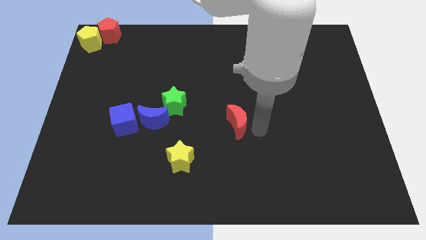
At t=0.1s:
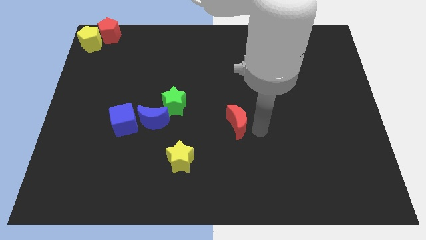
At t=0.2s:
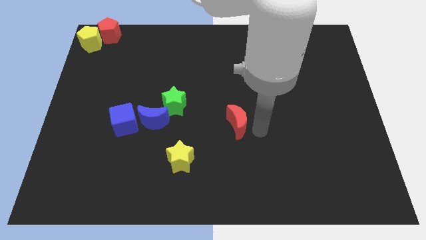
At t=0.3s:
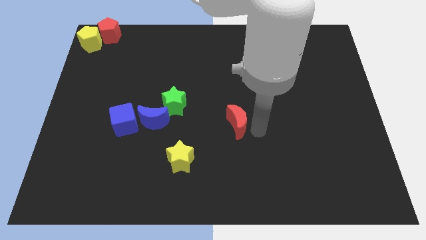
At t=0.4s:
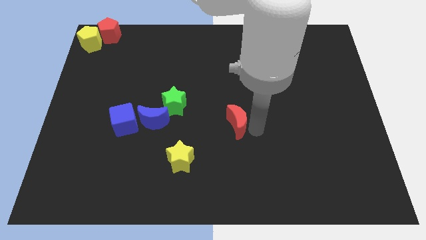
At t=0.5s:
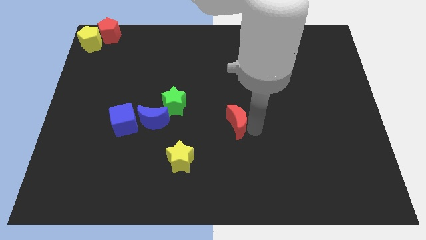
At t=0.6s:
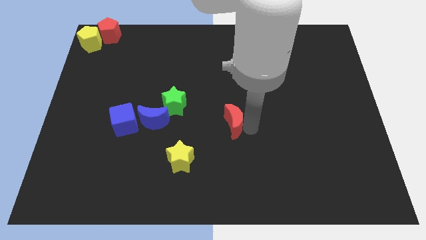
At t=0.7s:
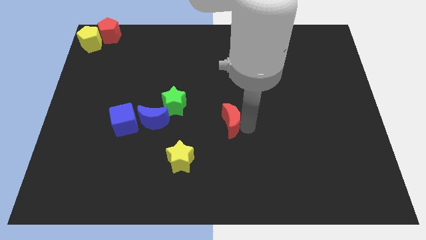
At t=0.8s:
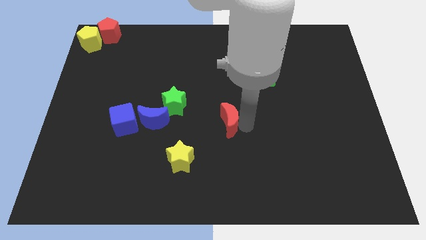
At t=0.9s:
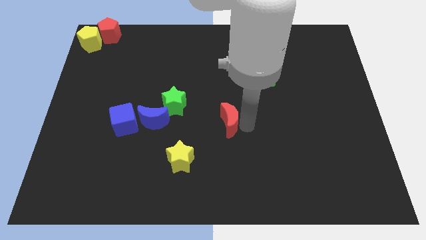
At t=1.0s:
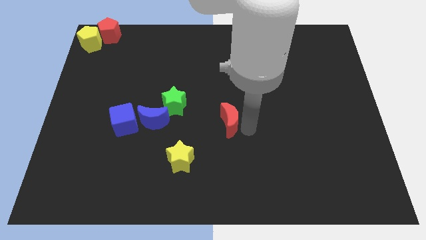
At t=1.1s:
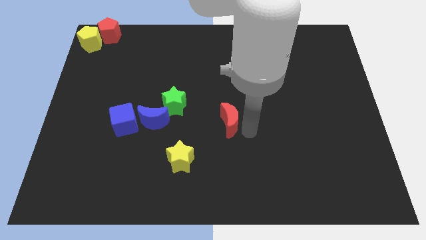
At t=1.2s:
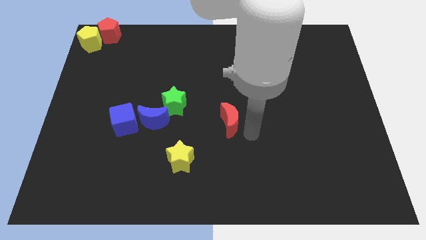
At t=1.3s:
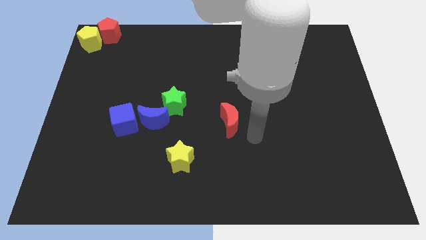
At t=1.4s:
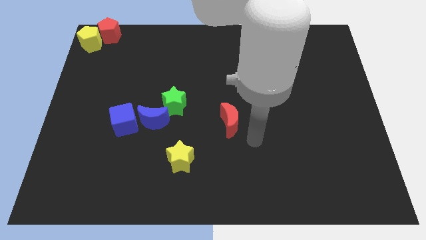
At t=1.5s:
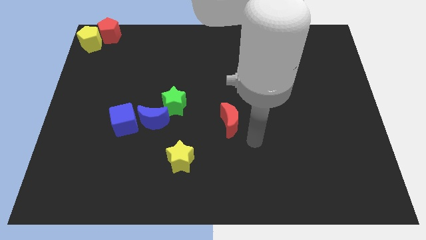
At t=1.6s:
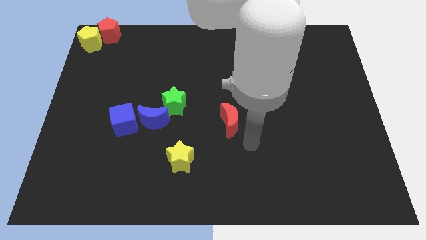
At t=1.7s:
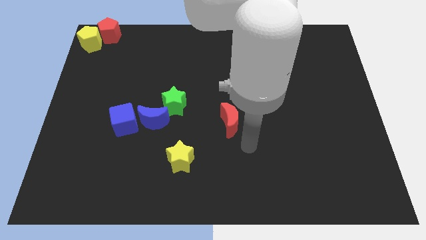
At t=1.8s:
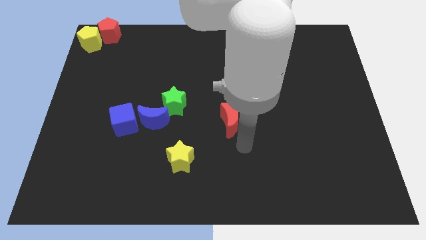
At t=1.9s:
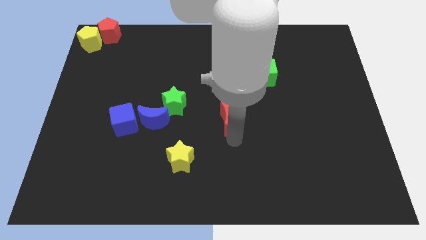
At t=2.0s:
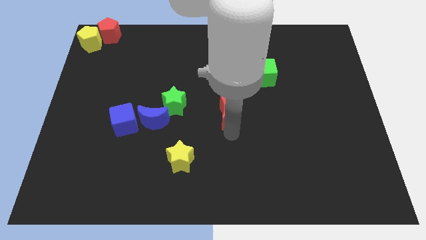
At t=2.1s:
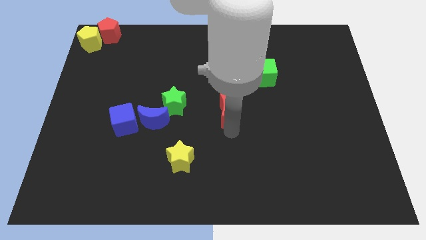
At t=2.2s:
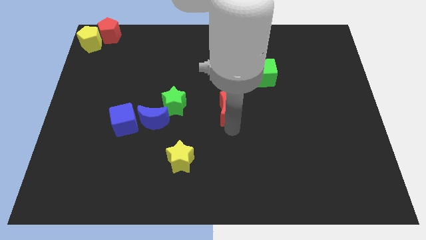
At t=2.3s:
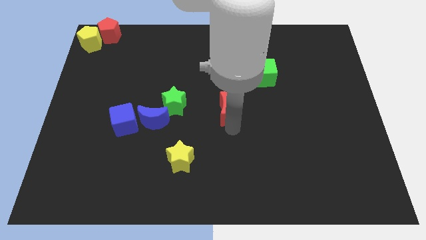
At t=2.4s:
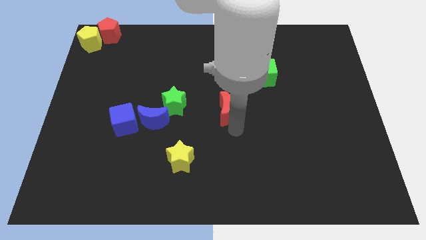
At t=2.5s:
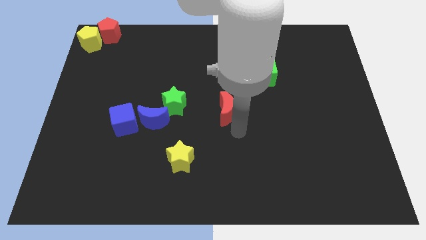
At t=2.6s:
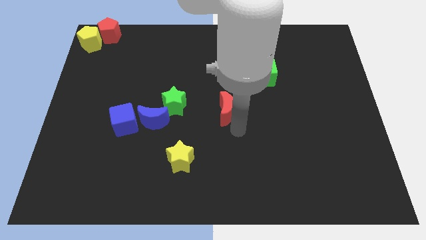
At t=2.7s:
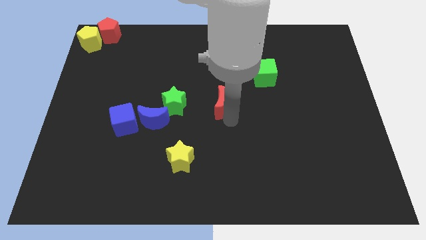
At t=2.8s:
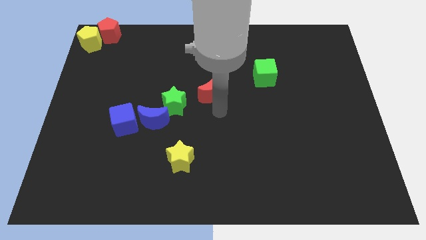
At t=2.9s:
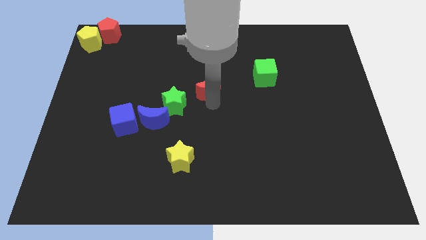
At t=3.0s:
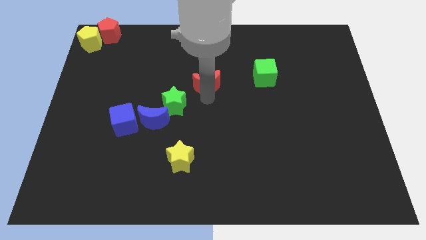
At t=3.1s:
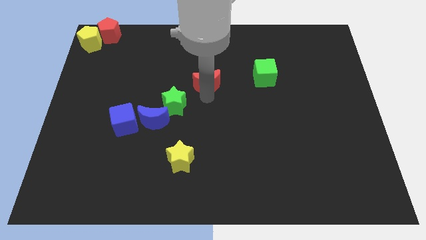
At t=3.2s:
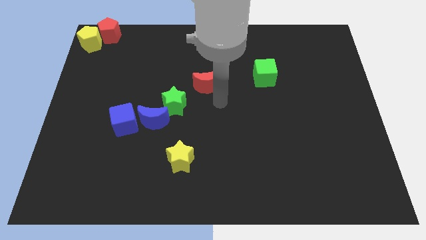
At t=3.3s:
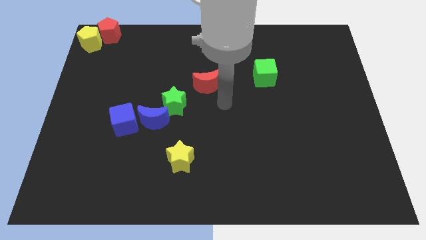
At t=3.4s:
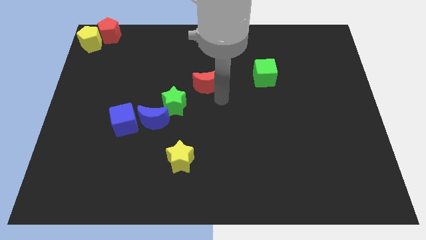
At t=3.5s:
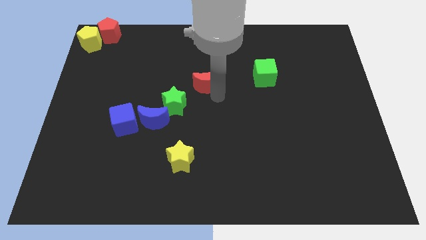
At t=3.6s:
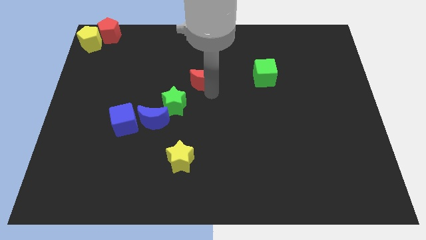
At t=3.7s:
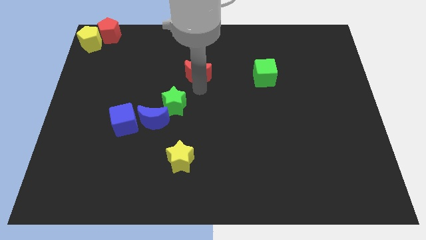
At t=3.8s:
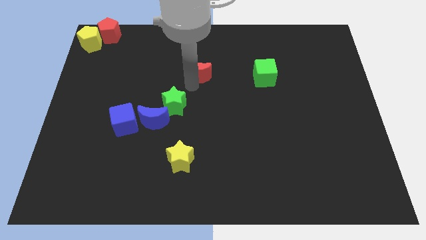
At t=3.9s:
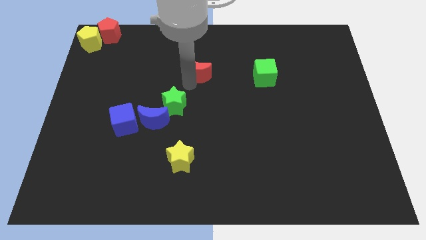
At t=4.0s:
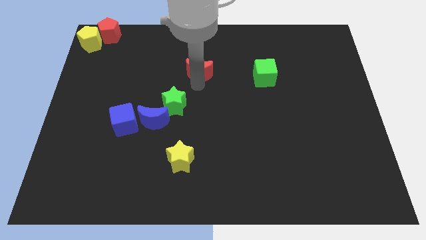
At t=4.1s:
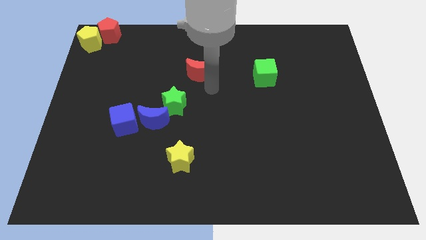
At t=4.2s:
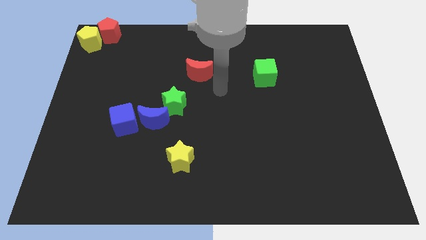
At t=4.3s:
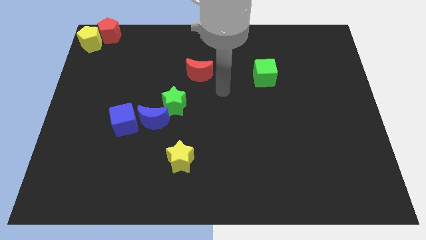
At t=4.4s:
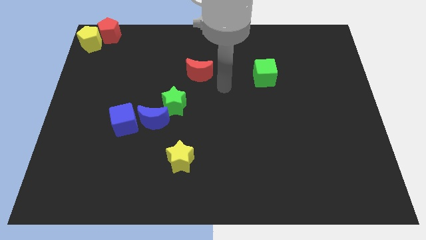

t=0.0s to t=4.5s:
place red moon to the left of green cube

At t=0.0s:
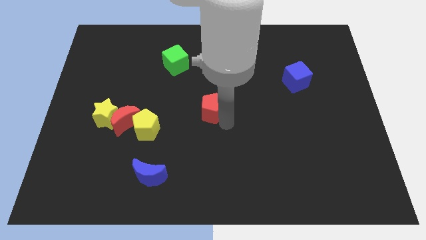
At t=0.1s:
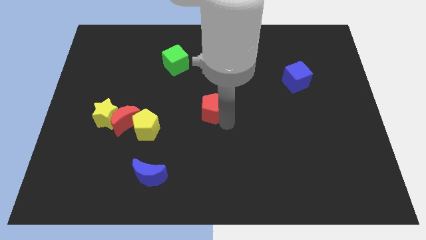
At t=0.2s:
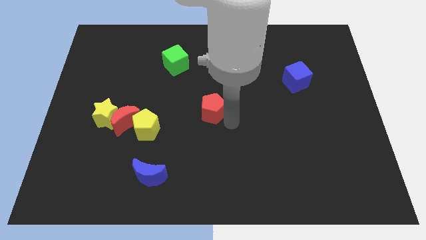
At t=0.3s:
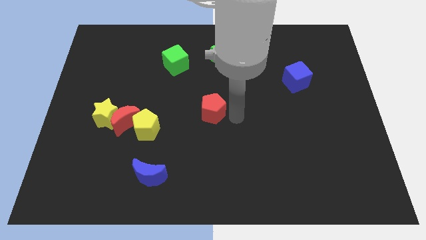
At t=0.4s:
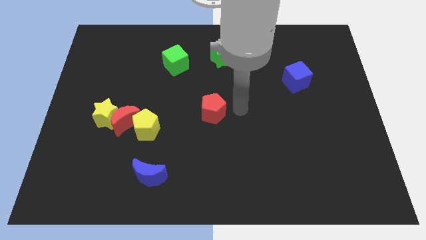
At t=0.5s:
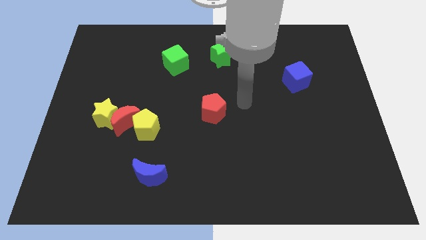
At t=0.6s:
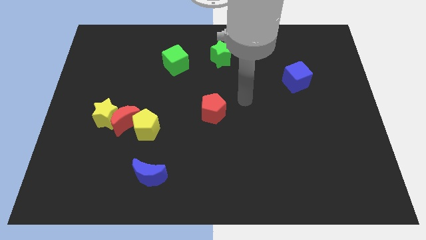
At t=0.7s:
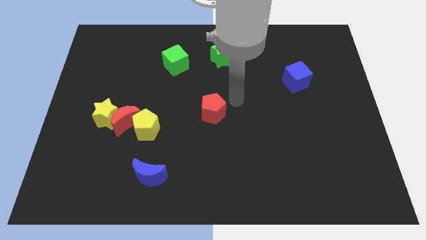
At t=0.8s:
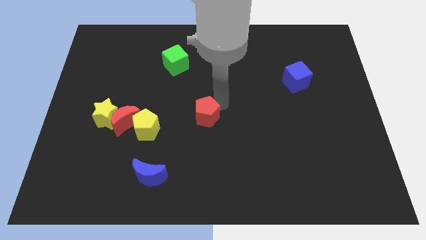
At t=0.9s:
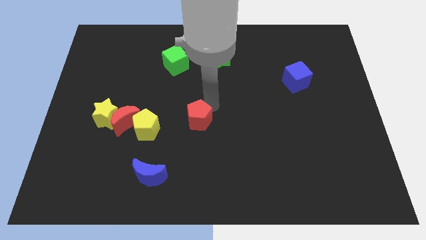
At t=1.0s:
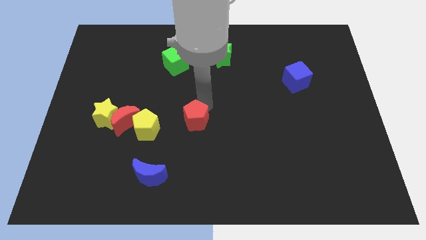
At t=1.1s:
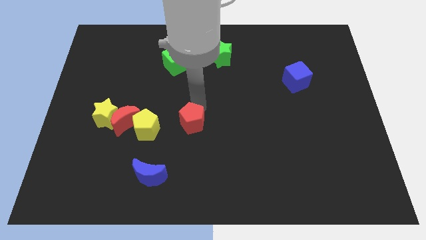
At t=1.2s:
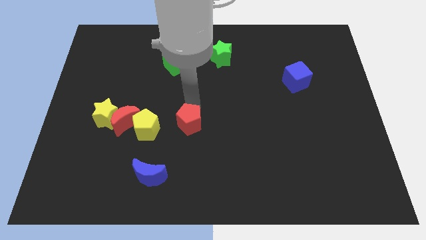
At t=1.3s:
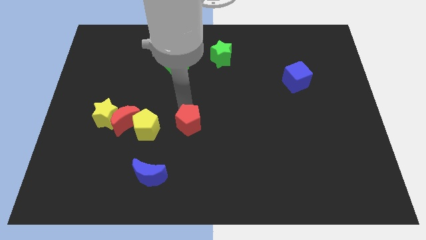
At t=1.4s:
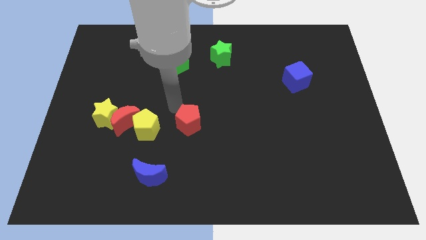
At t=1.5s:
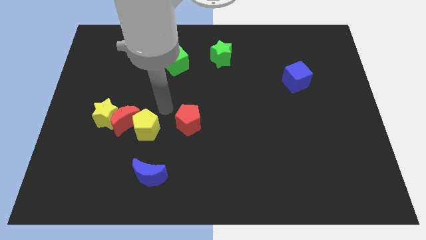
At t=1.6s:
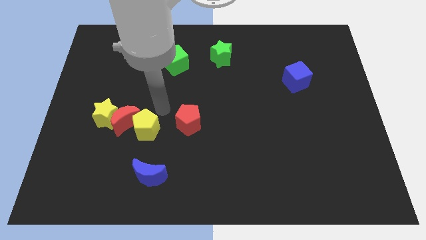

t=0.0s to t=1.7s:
move the red pentagon diagonal to the right of the yellow pentagon

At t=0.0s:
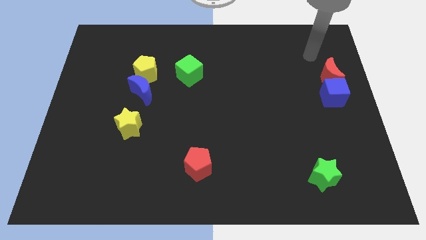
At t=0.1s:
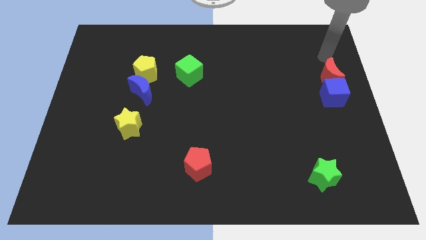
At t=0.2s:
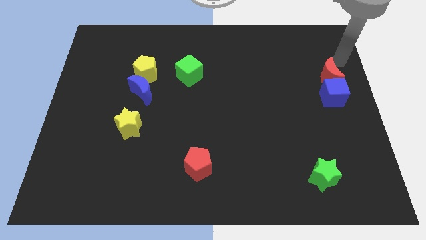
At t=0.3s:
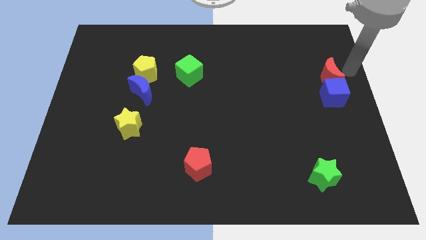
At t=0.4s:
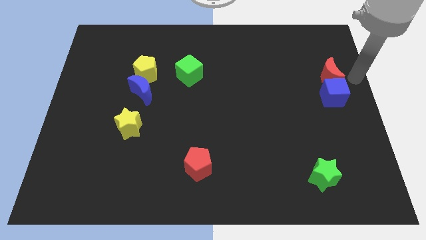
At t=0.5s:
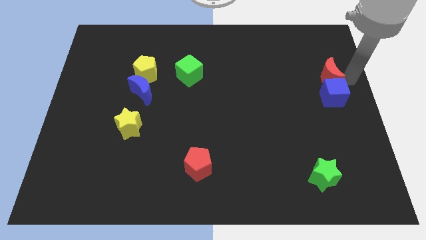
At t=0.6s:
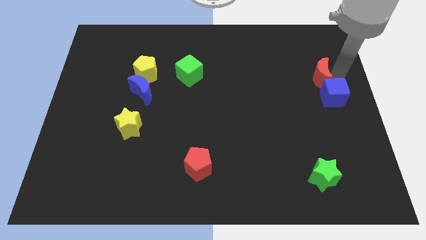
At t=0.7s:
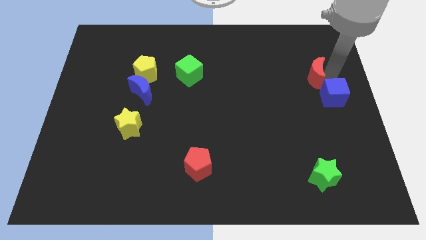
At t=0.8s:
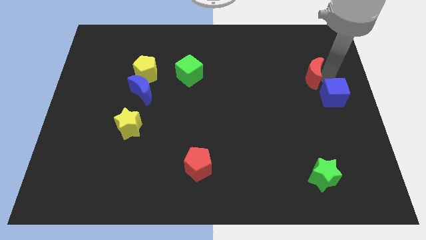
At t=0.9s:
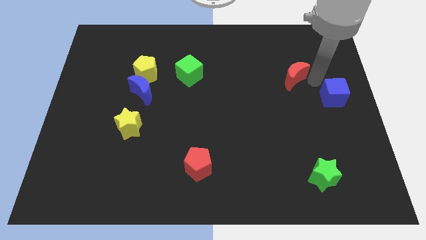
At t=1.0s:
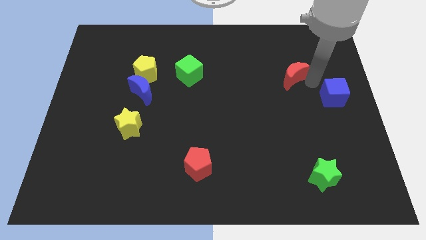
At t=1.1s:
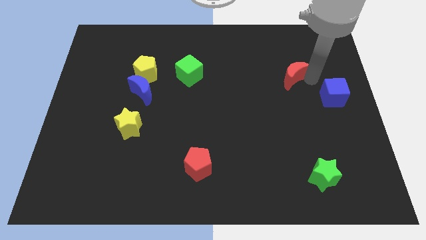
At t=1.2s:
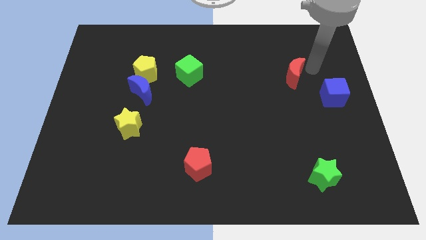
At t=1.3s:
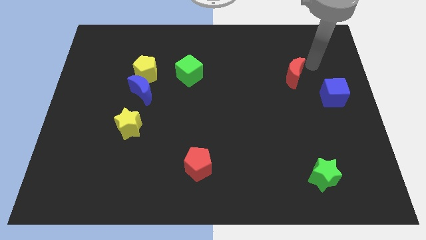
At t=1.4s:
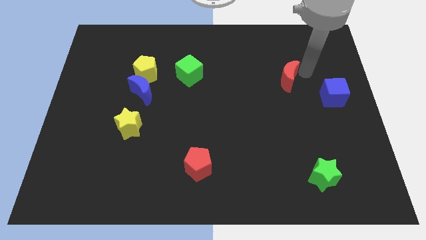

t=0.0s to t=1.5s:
place the red moon diagonally to the blue cube

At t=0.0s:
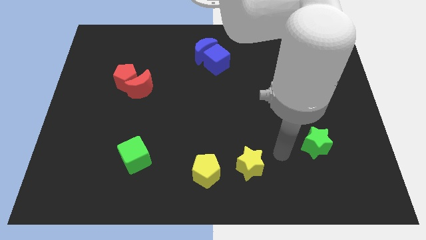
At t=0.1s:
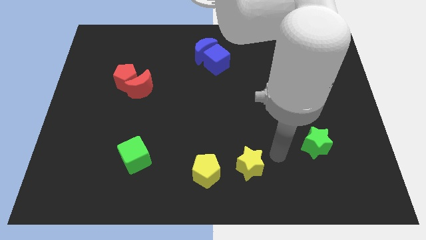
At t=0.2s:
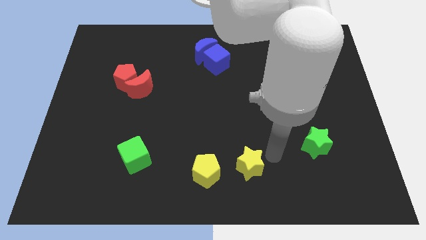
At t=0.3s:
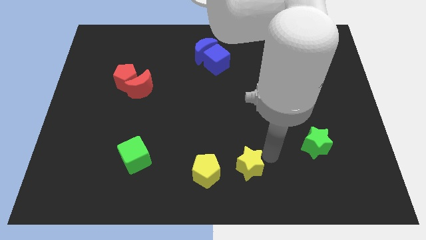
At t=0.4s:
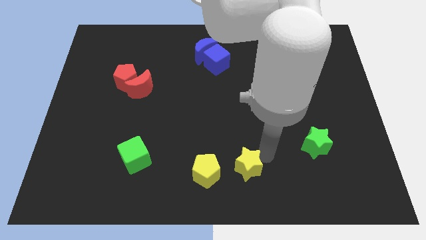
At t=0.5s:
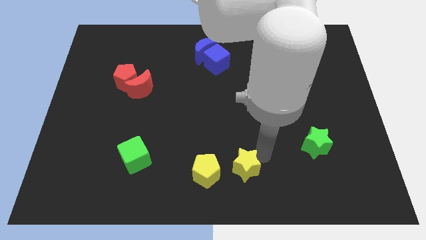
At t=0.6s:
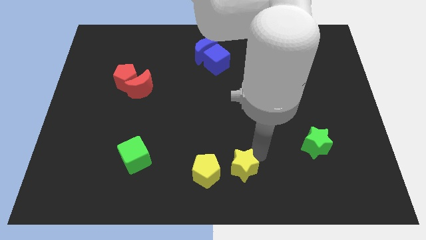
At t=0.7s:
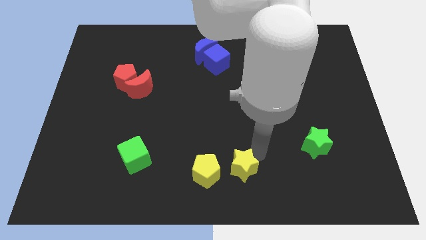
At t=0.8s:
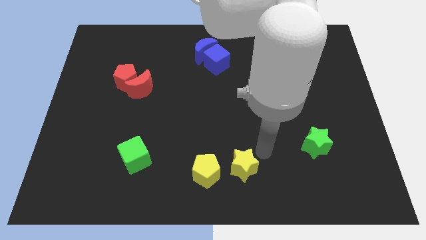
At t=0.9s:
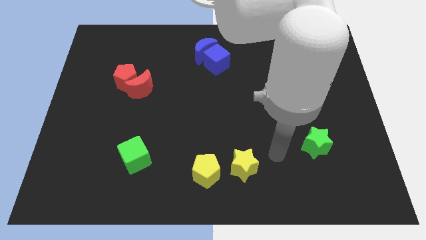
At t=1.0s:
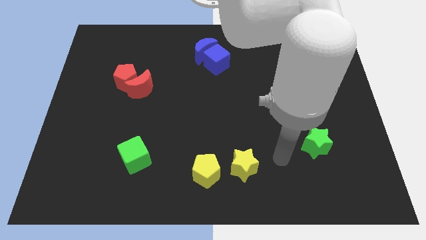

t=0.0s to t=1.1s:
push the yellow star slightly to the left
